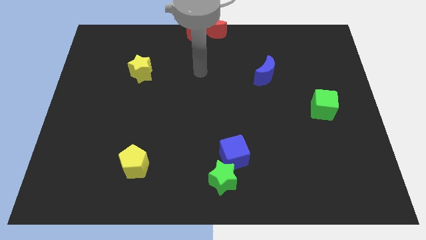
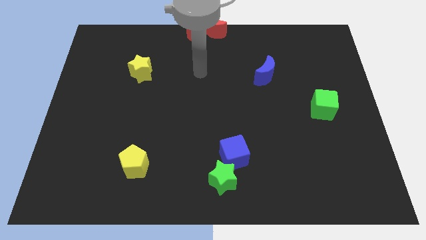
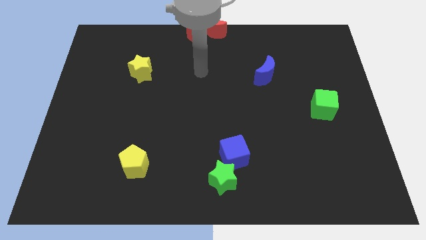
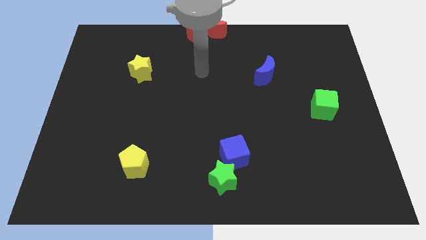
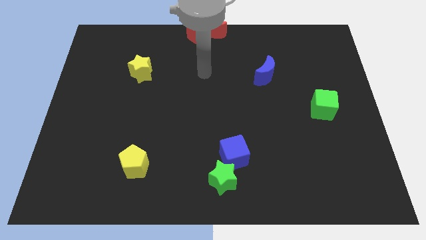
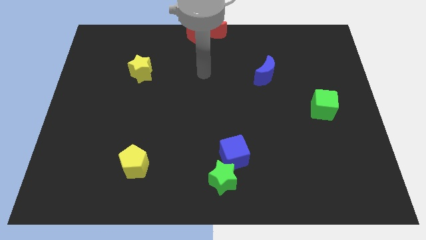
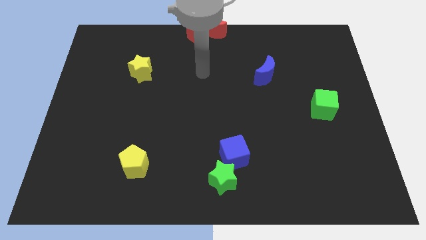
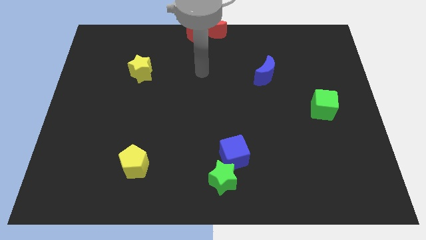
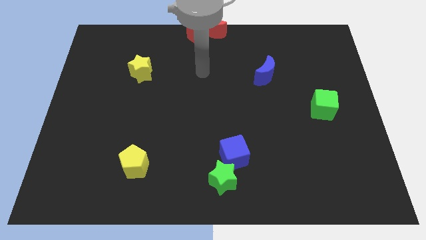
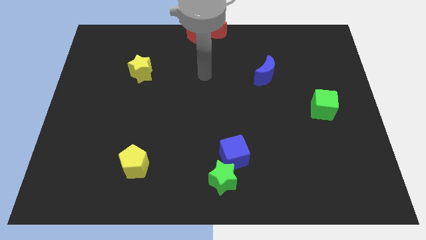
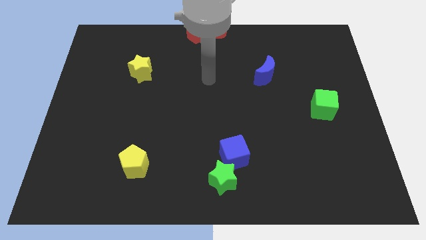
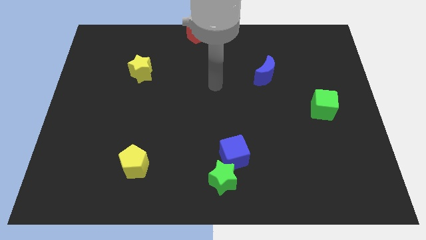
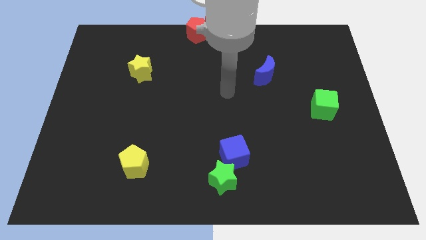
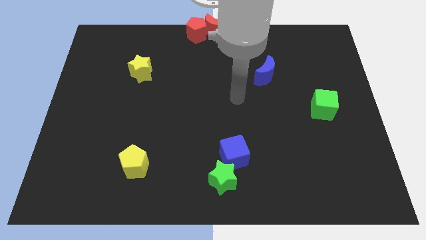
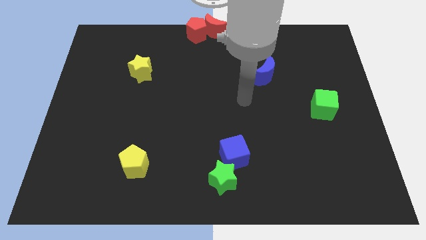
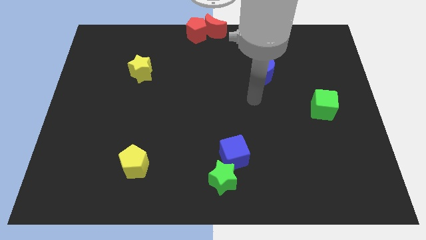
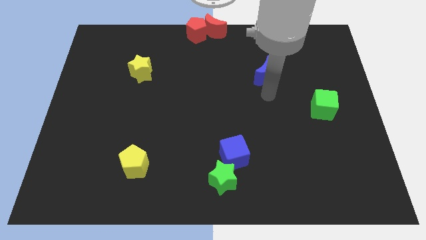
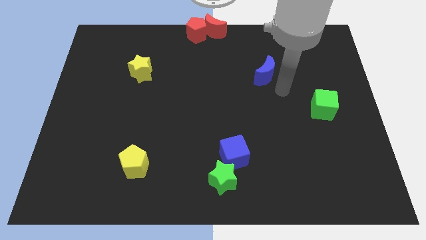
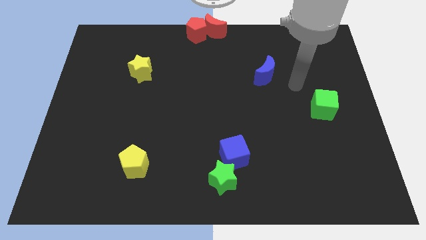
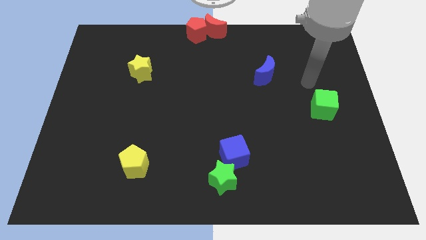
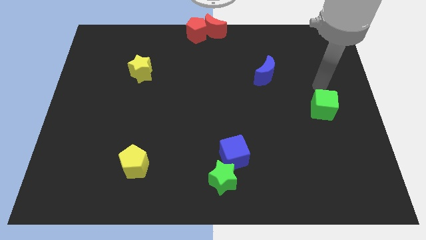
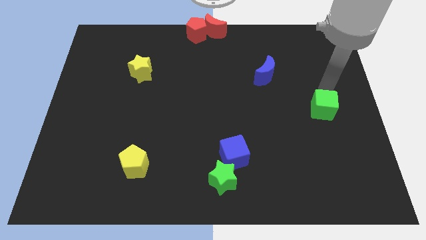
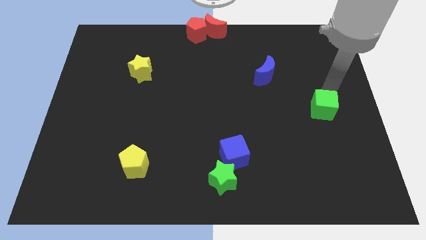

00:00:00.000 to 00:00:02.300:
place your arm above the green cube

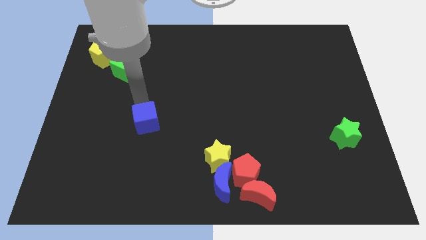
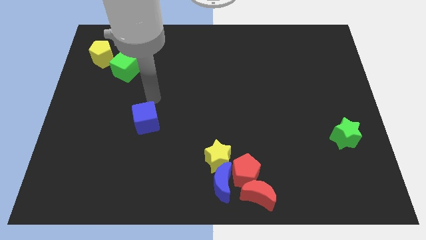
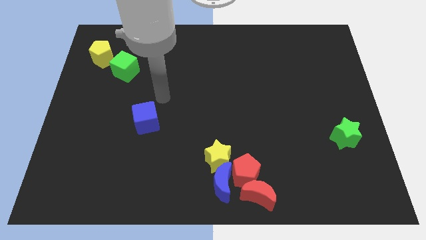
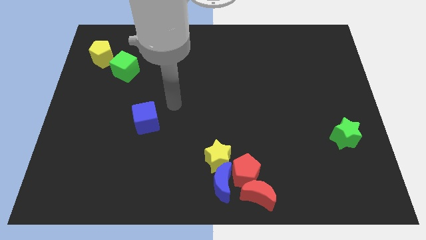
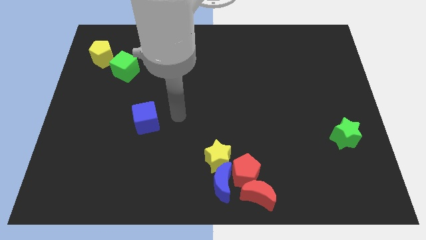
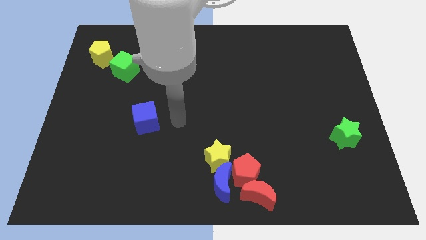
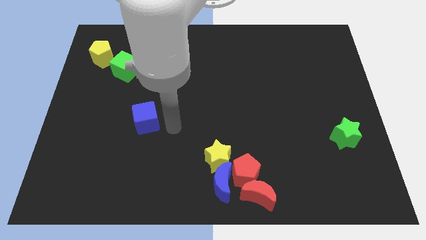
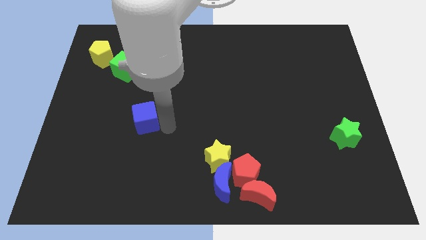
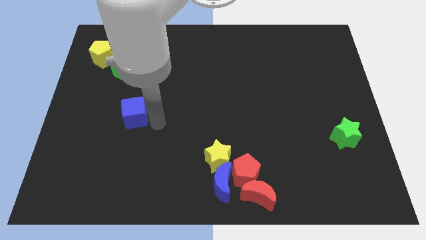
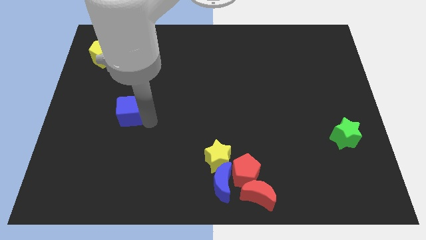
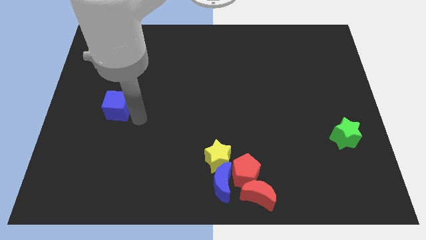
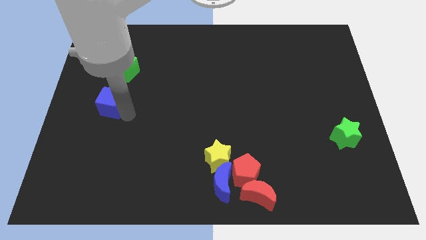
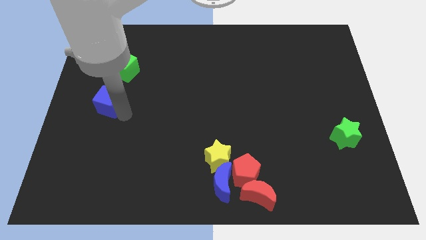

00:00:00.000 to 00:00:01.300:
place blue cube to the bottom of the green cube

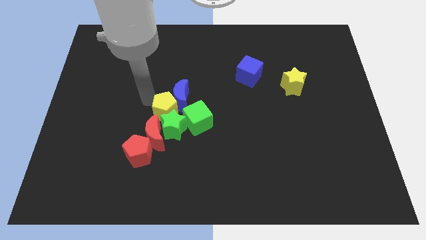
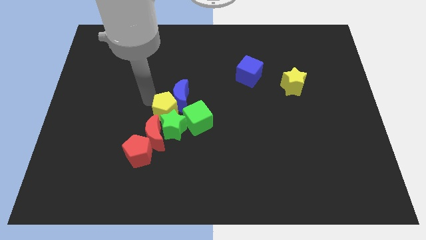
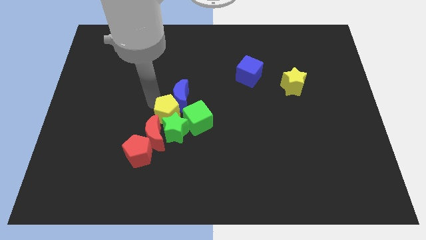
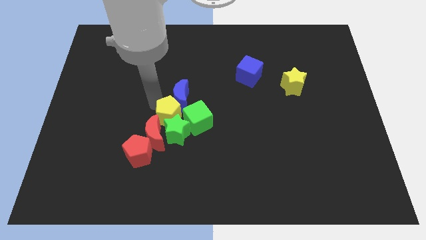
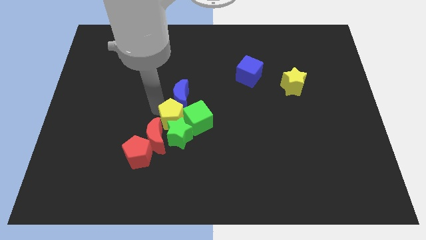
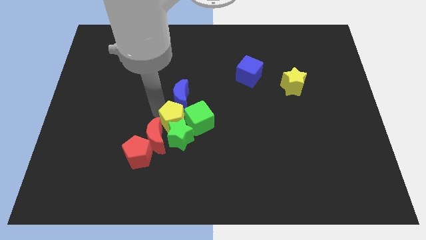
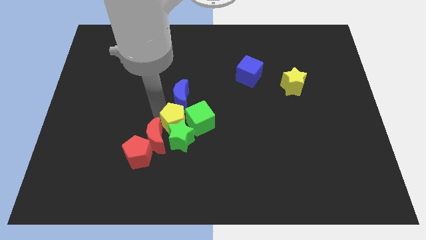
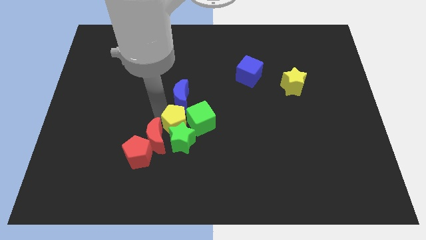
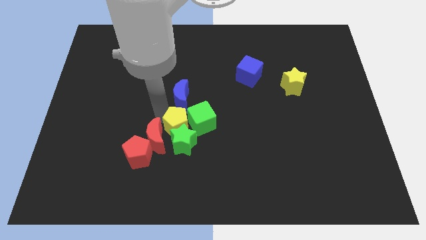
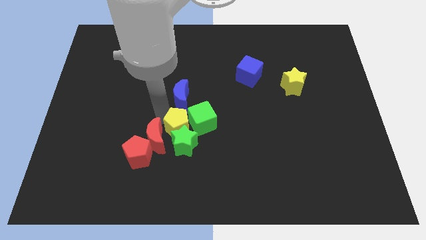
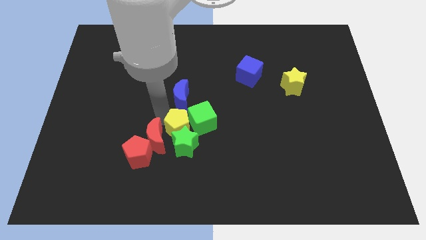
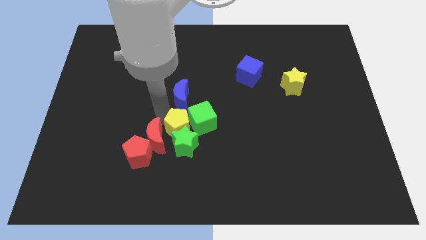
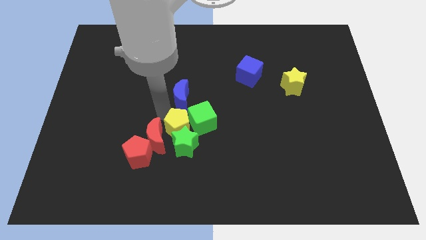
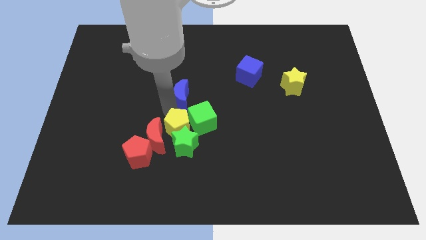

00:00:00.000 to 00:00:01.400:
push the yellow pentagon above the green star

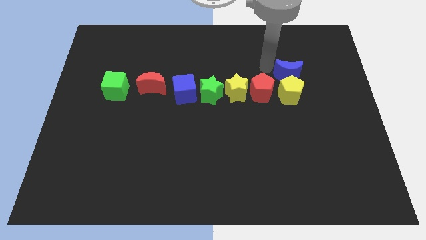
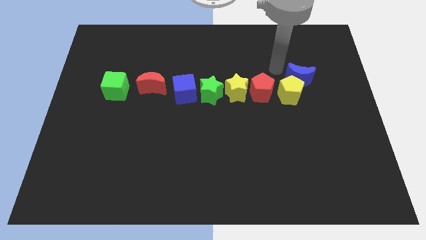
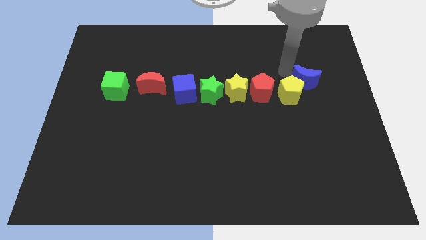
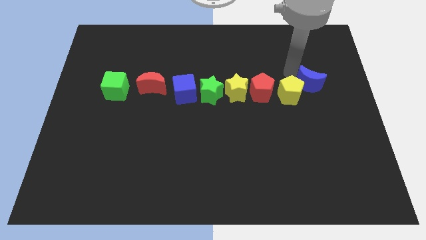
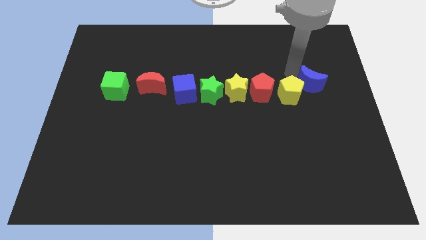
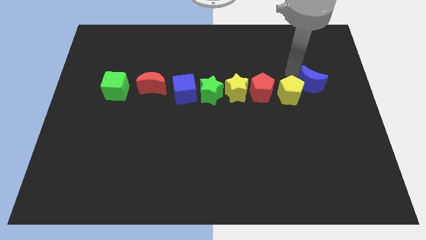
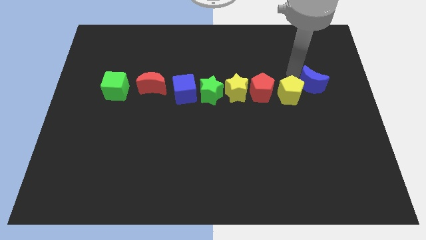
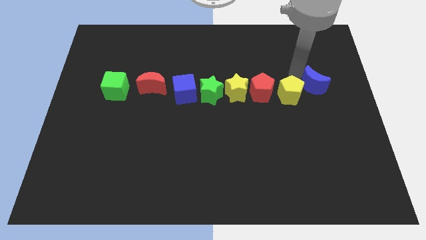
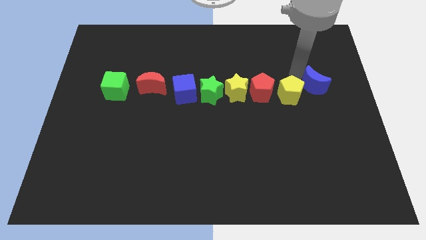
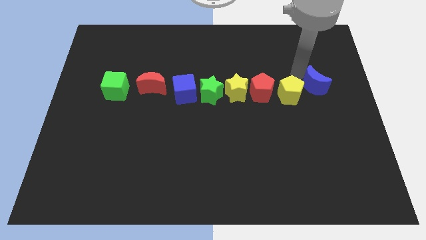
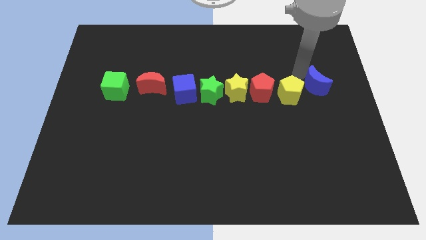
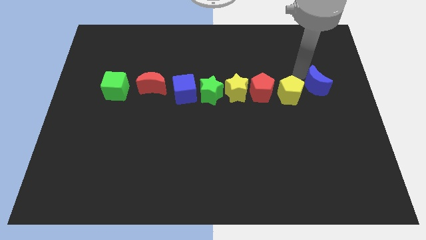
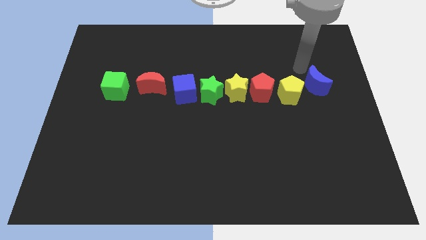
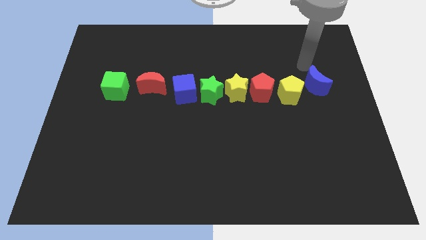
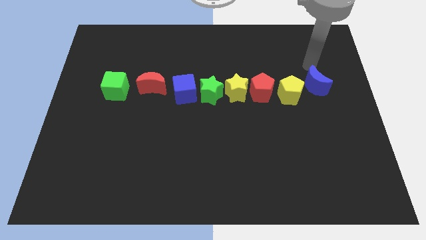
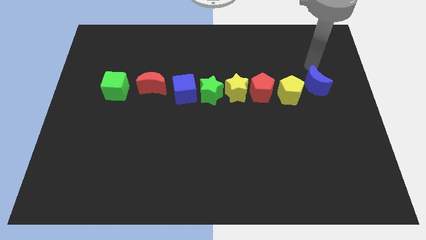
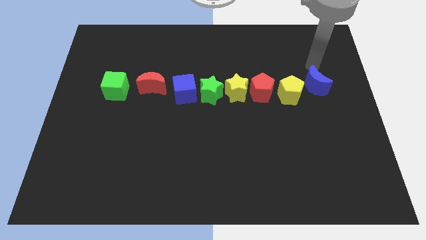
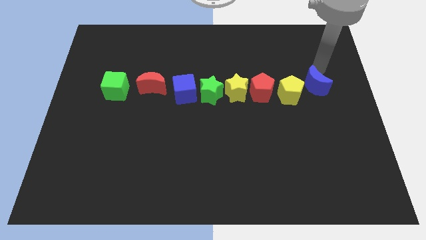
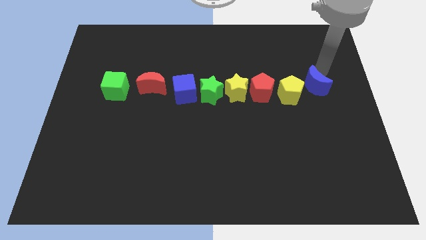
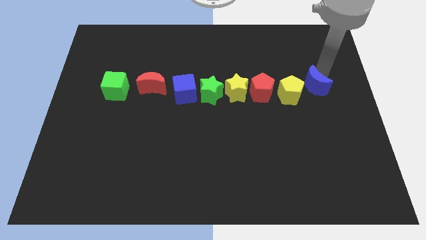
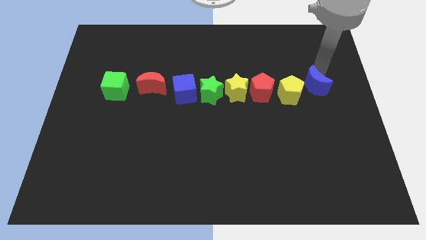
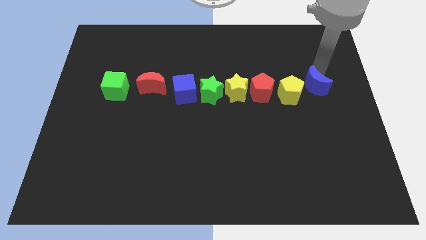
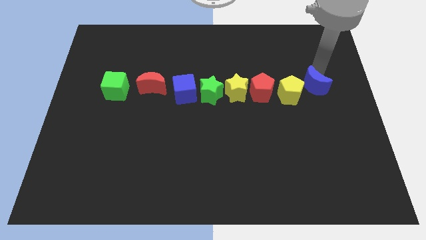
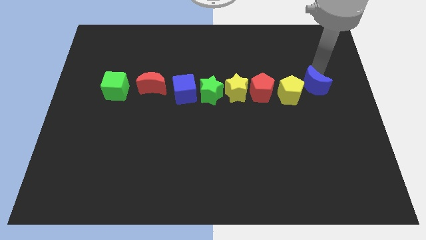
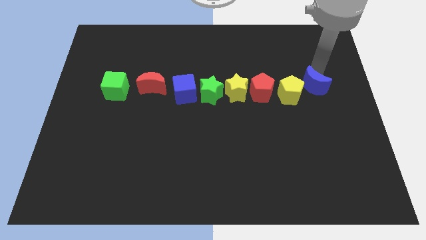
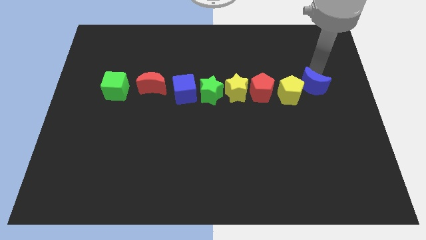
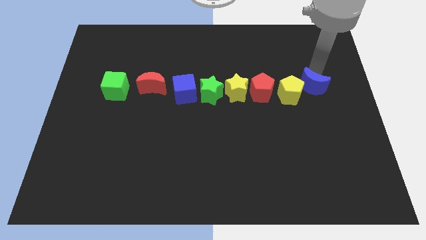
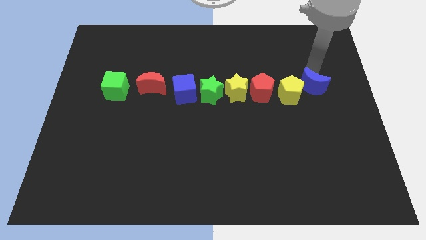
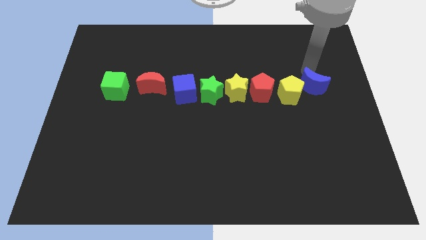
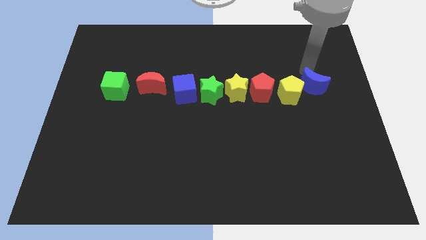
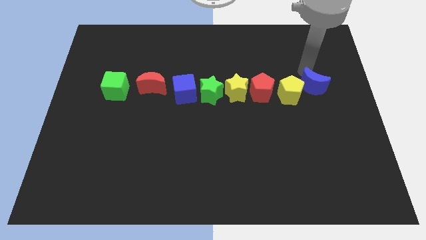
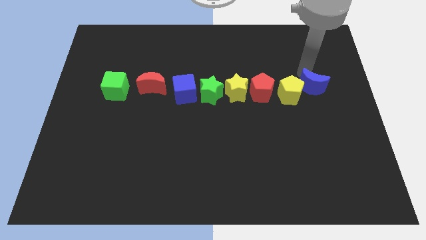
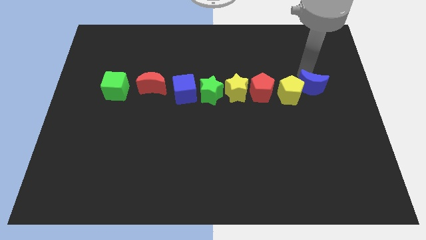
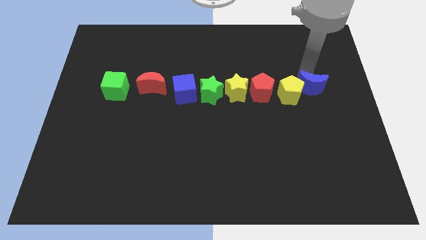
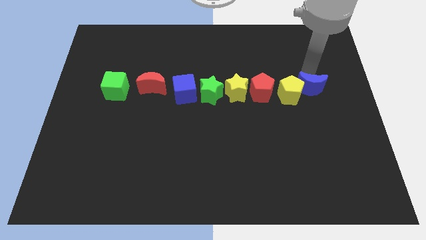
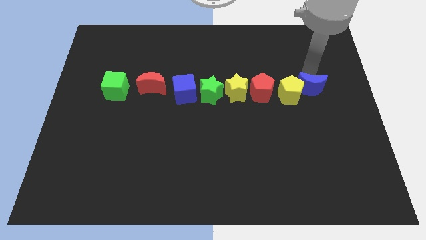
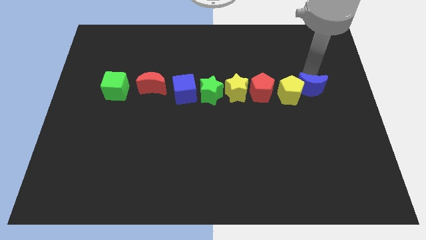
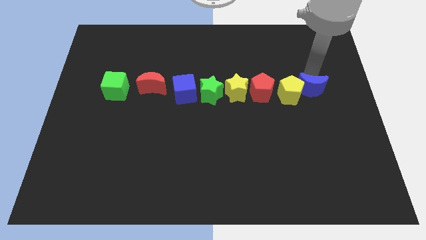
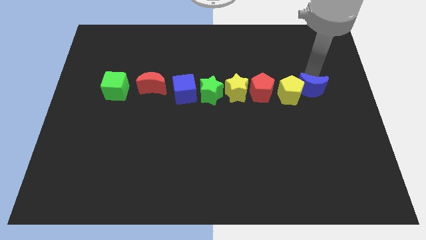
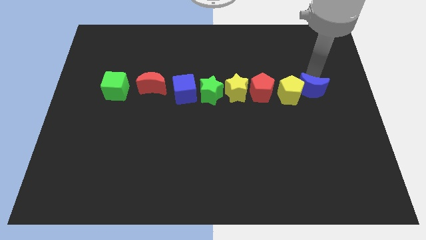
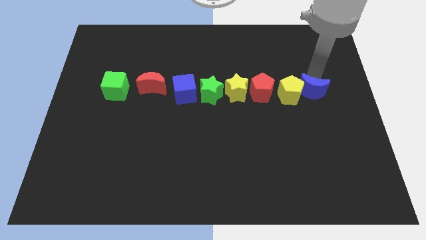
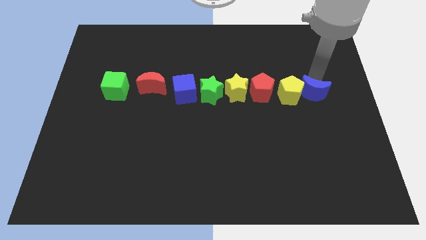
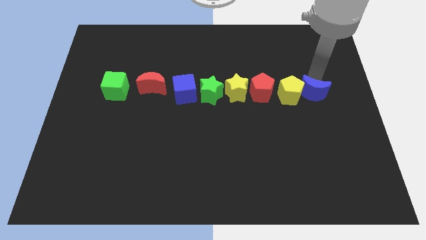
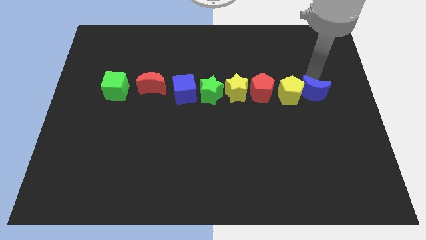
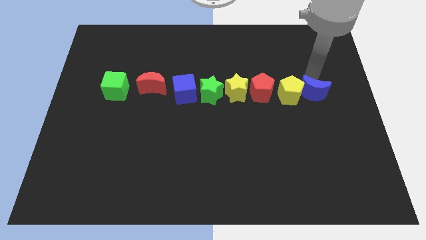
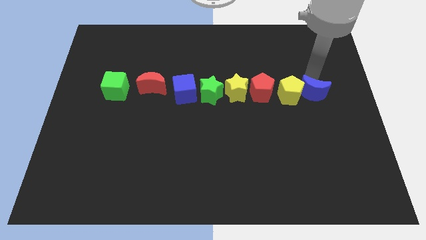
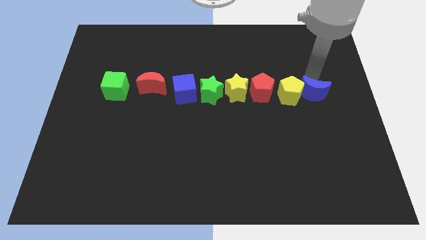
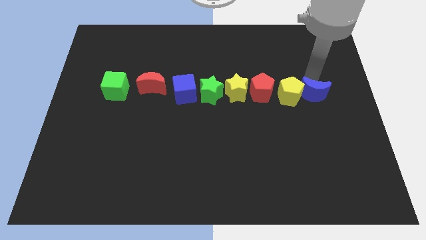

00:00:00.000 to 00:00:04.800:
make the blue crescent to touch the right side of the yellow pentagon
